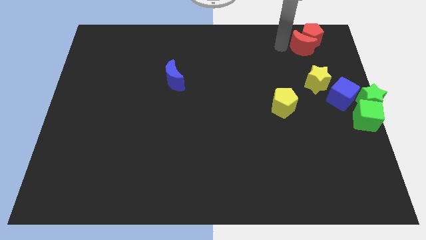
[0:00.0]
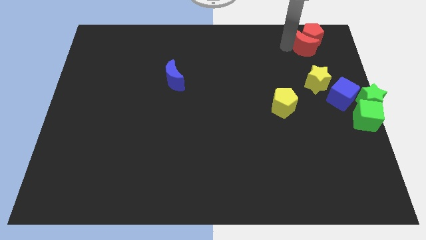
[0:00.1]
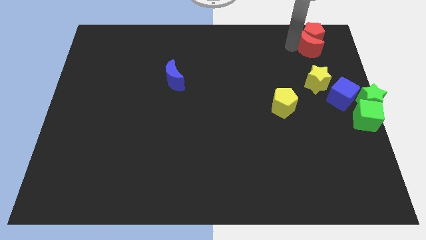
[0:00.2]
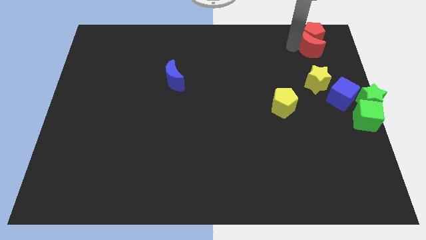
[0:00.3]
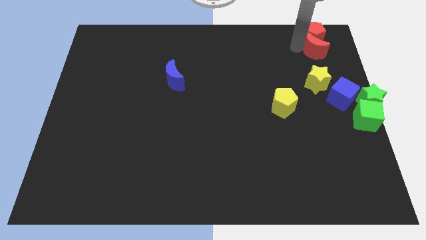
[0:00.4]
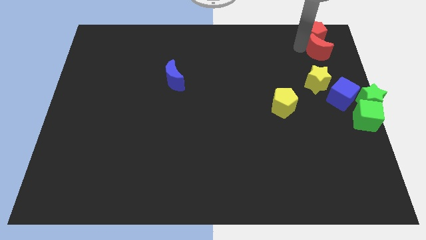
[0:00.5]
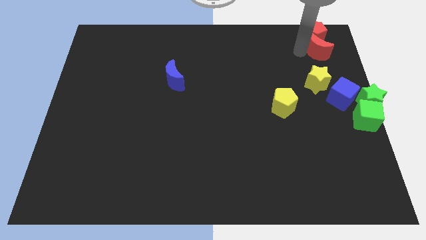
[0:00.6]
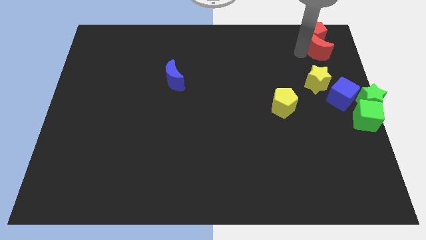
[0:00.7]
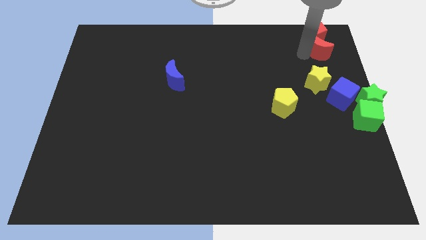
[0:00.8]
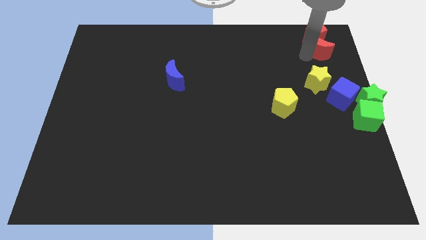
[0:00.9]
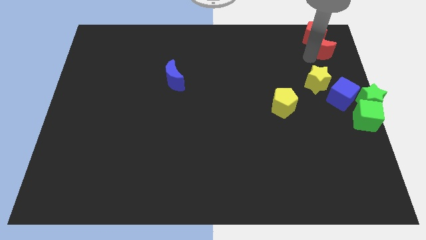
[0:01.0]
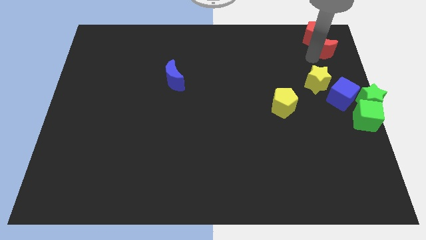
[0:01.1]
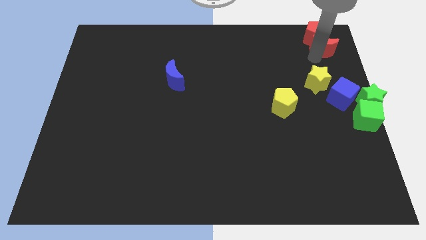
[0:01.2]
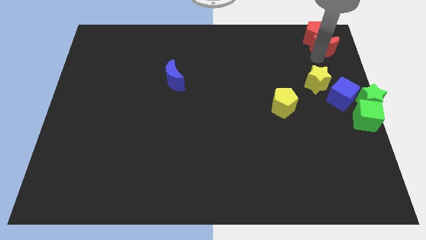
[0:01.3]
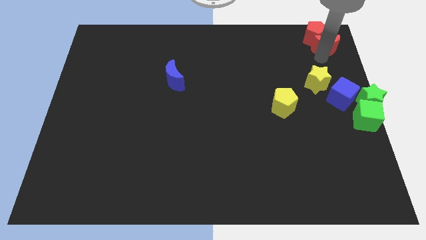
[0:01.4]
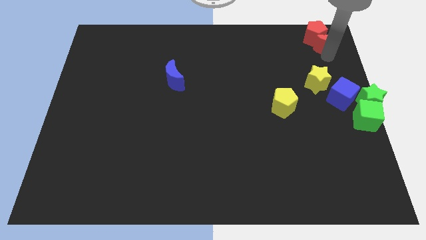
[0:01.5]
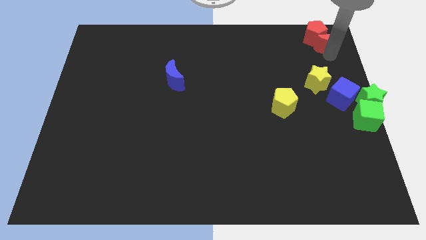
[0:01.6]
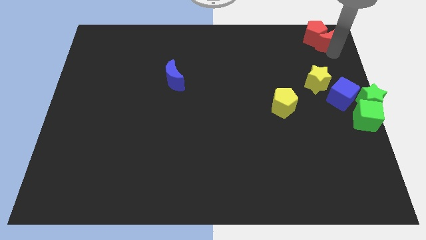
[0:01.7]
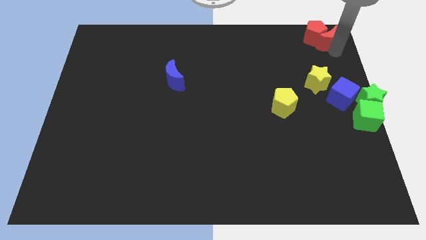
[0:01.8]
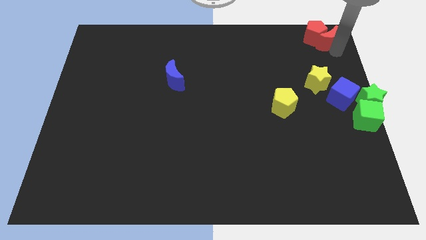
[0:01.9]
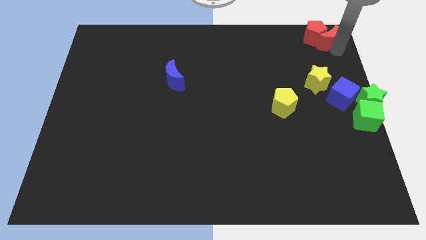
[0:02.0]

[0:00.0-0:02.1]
place the red crescent and red pentagon to the top right corner of the board

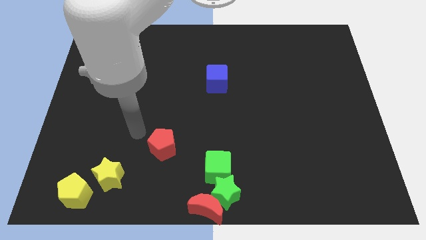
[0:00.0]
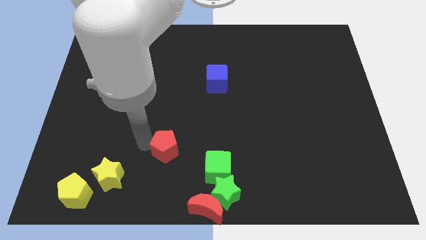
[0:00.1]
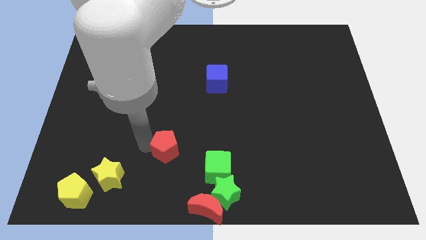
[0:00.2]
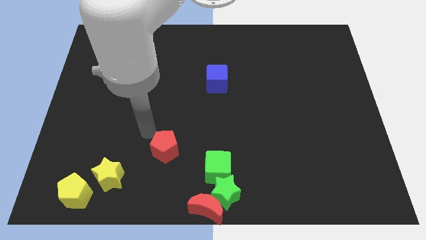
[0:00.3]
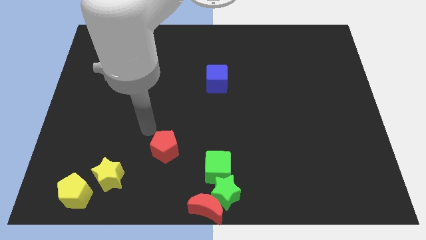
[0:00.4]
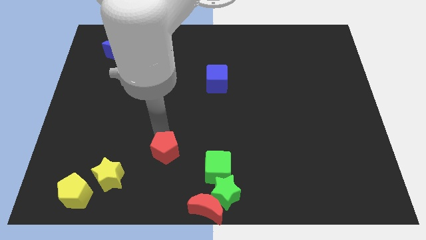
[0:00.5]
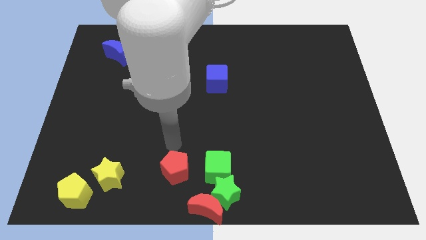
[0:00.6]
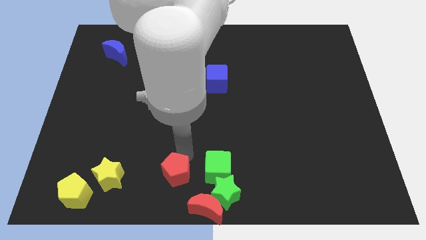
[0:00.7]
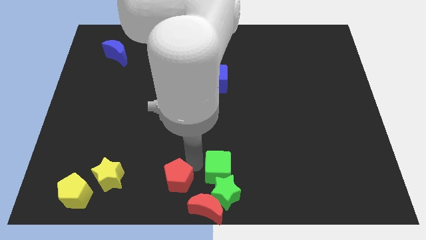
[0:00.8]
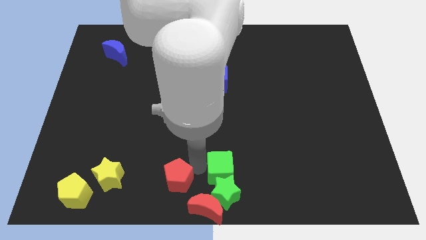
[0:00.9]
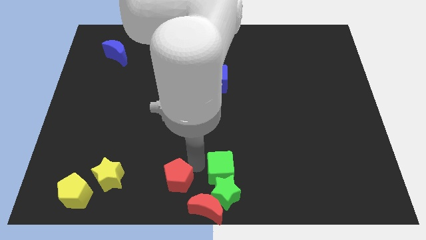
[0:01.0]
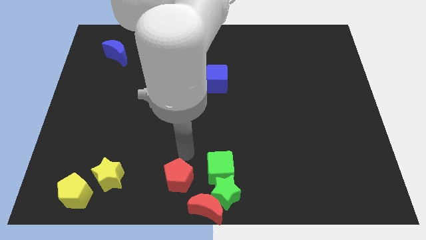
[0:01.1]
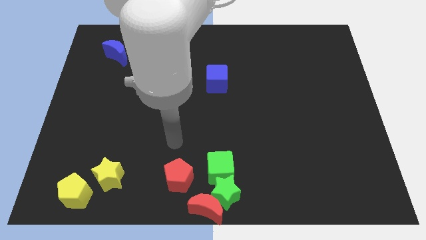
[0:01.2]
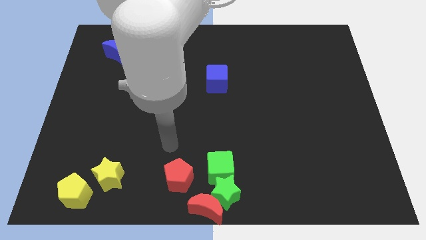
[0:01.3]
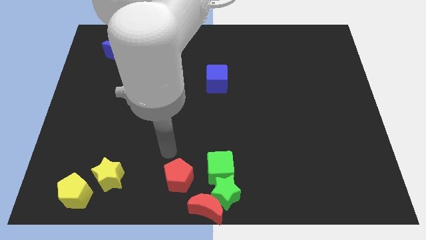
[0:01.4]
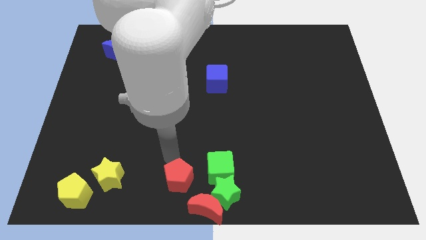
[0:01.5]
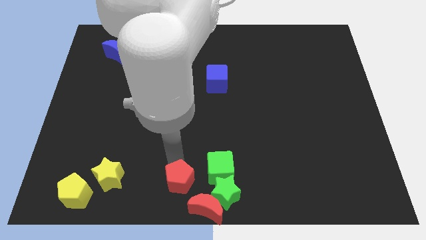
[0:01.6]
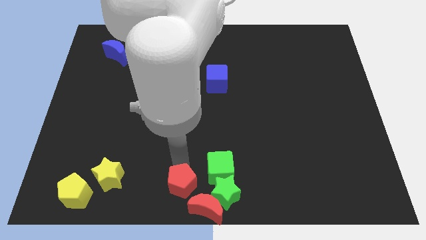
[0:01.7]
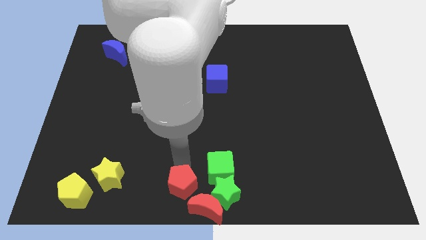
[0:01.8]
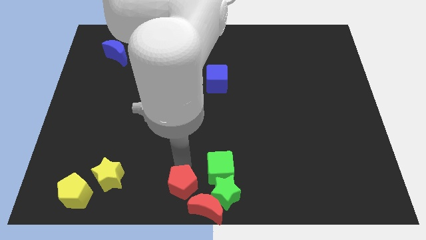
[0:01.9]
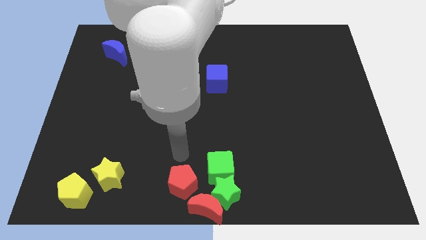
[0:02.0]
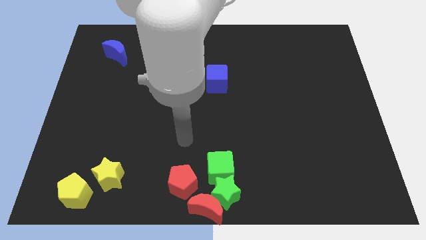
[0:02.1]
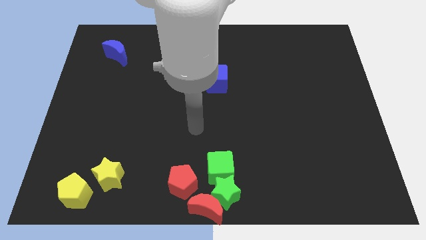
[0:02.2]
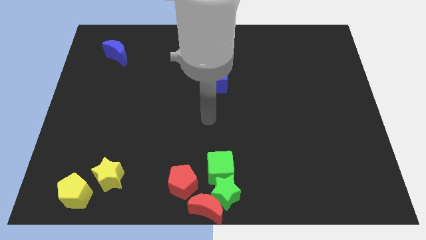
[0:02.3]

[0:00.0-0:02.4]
push the red pentagon close to the red moon

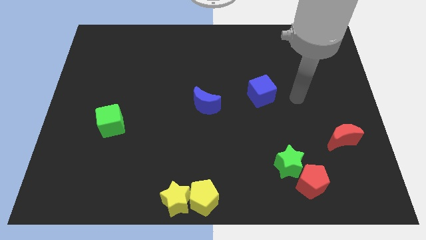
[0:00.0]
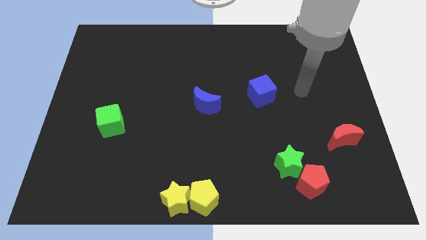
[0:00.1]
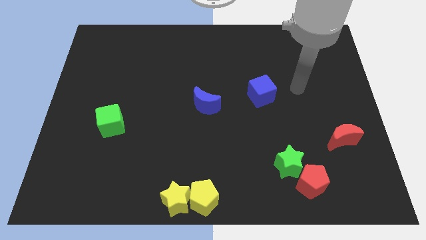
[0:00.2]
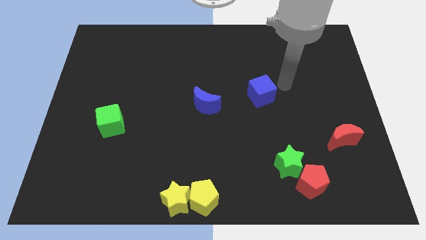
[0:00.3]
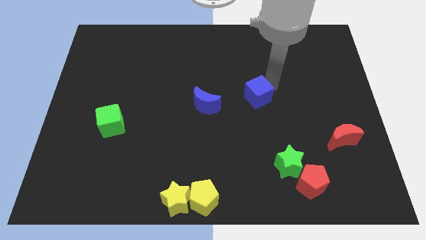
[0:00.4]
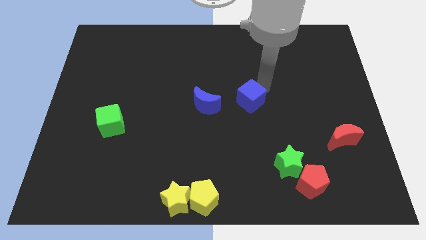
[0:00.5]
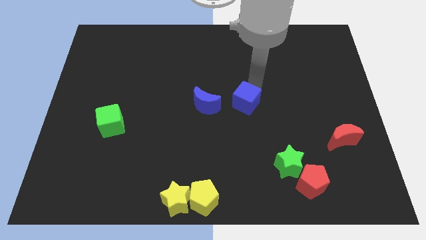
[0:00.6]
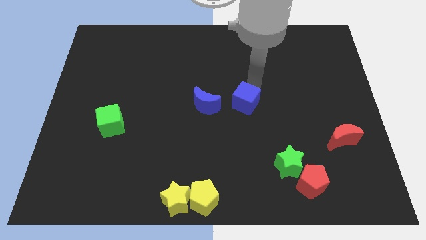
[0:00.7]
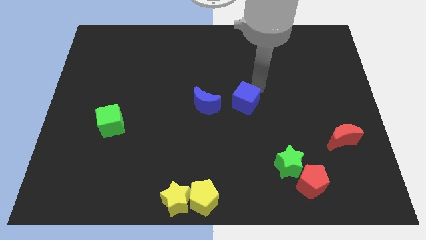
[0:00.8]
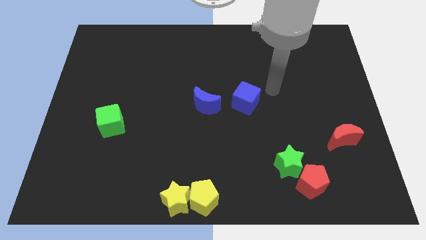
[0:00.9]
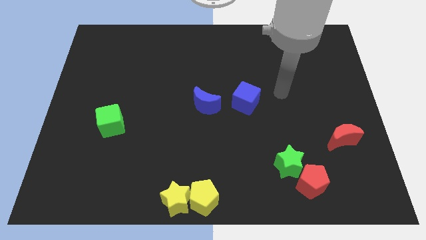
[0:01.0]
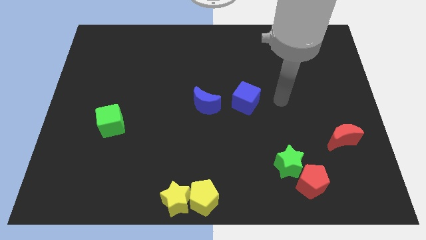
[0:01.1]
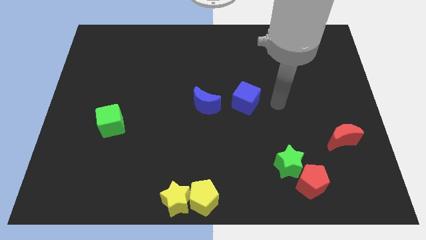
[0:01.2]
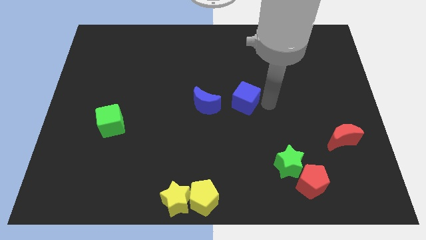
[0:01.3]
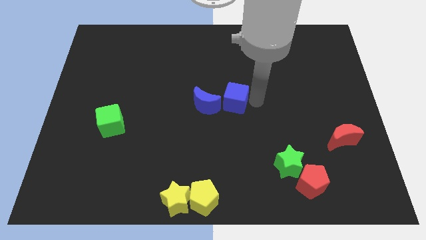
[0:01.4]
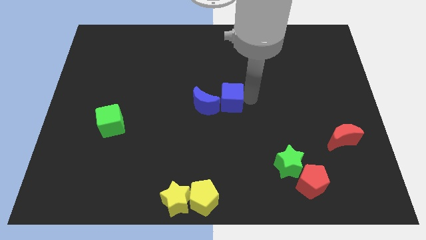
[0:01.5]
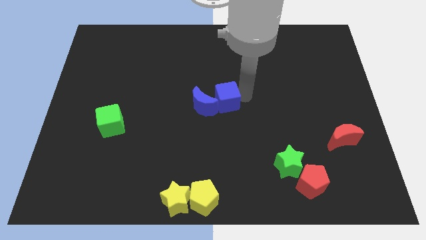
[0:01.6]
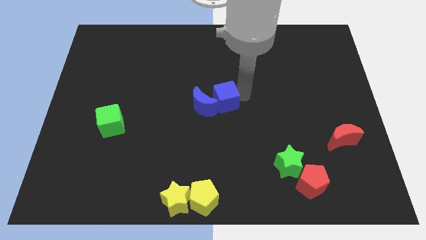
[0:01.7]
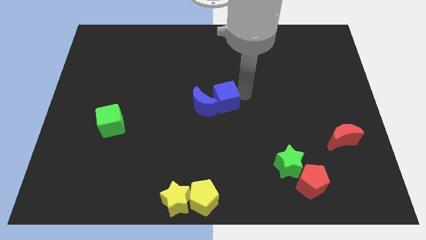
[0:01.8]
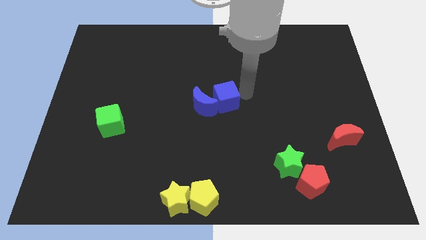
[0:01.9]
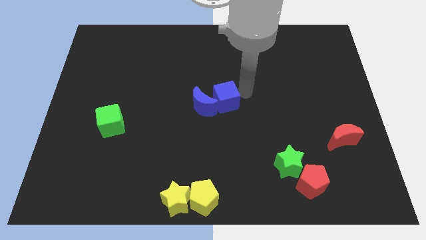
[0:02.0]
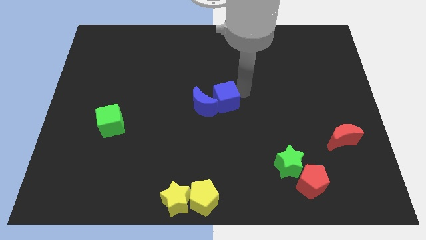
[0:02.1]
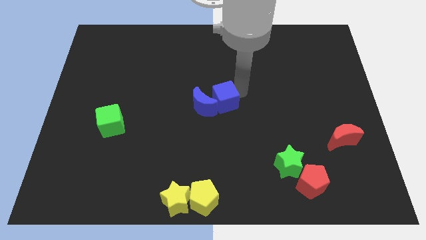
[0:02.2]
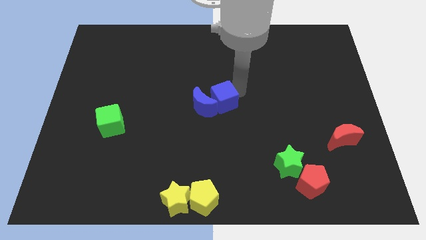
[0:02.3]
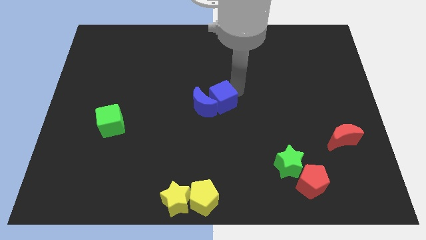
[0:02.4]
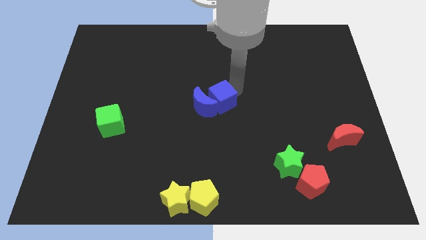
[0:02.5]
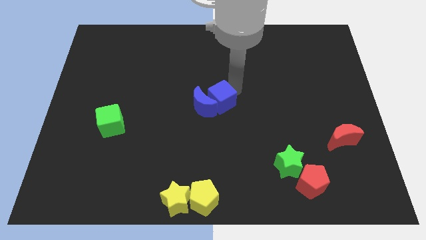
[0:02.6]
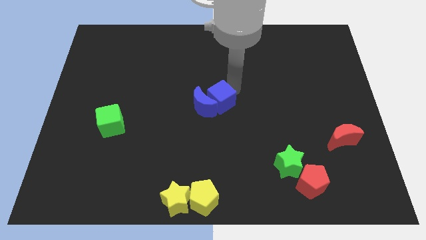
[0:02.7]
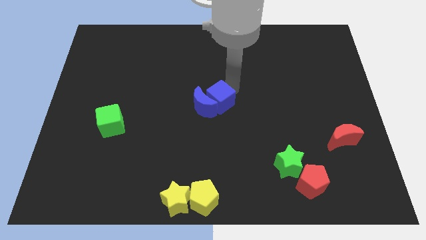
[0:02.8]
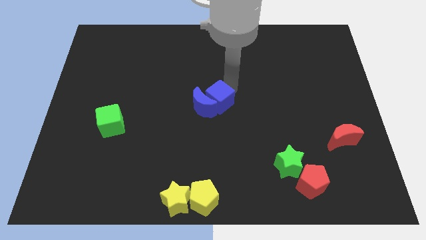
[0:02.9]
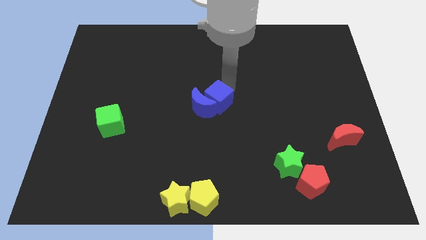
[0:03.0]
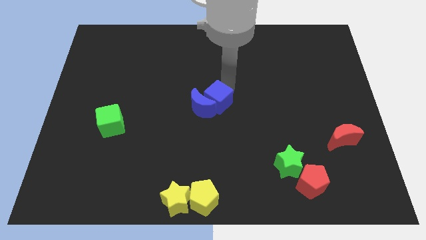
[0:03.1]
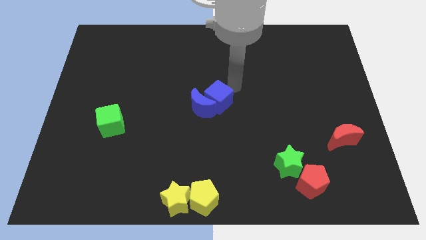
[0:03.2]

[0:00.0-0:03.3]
move the blue cube into the blue crescent

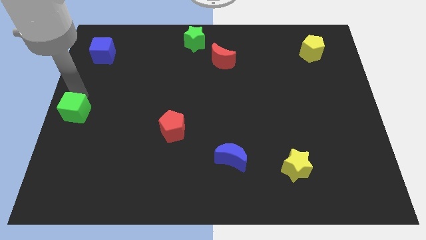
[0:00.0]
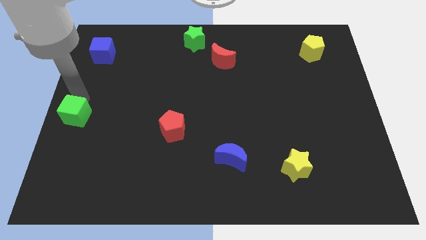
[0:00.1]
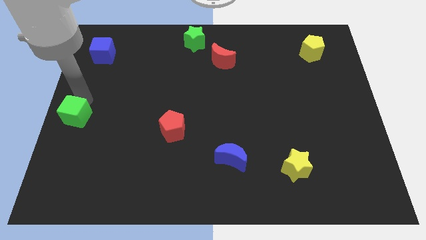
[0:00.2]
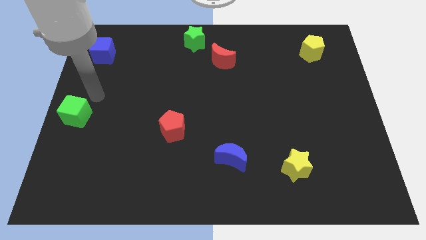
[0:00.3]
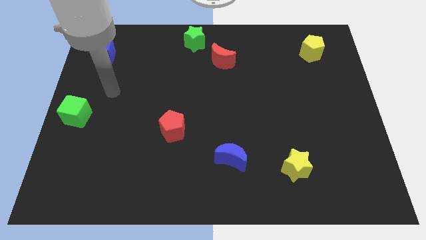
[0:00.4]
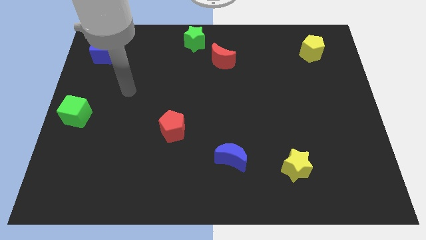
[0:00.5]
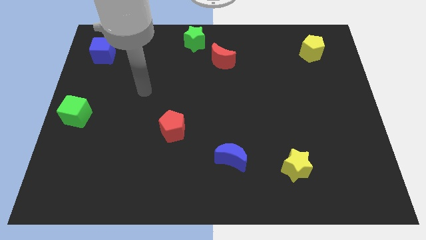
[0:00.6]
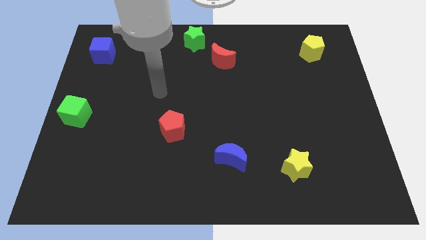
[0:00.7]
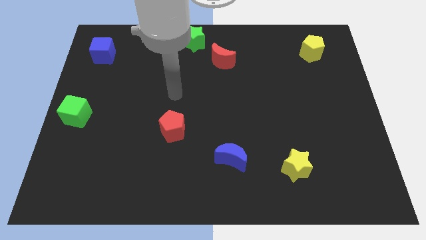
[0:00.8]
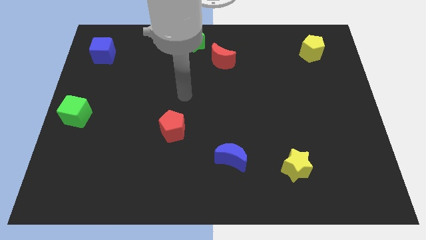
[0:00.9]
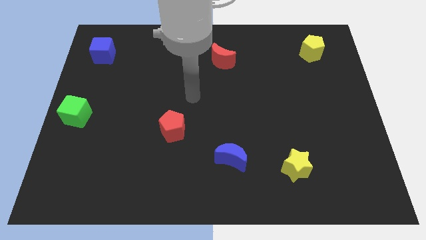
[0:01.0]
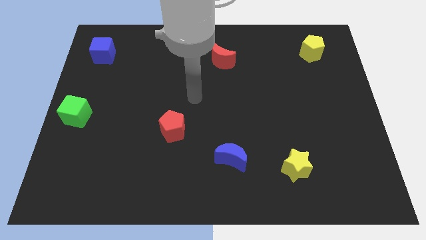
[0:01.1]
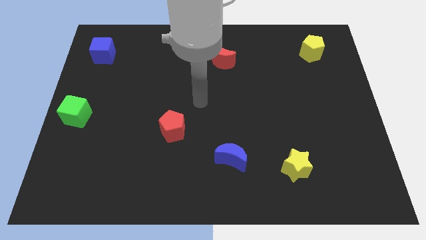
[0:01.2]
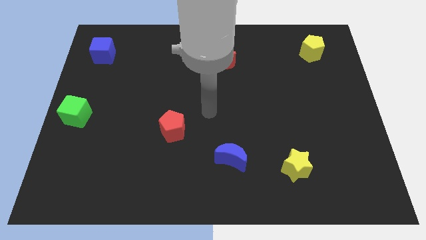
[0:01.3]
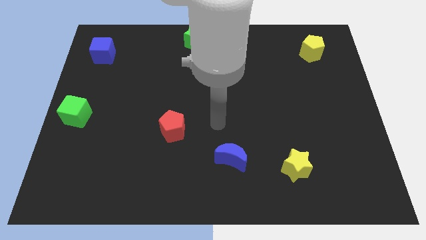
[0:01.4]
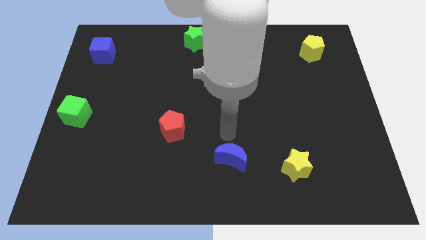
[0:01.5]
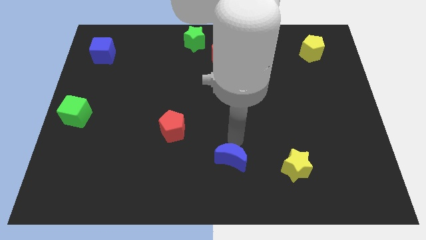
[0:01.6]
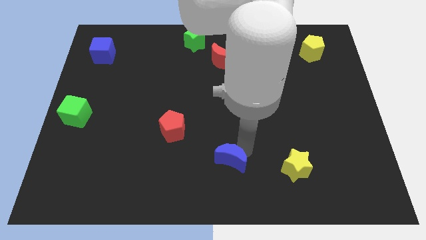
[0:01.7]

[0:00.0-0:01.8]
place the green cube slightly down
